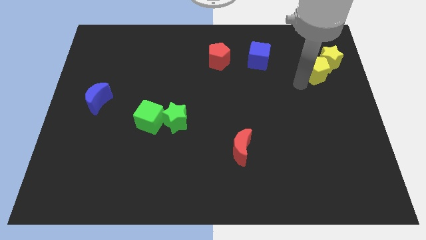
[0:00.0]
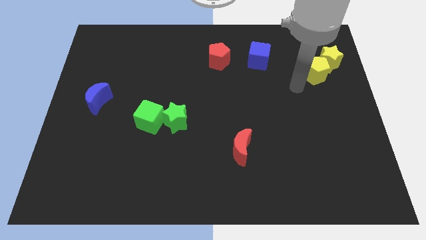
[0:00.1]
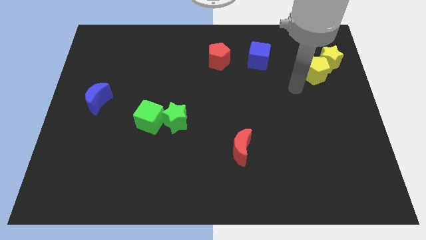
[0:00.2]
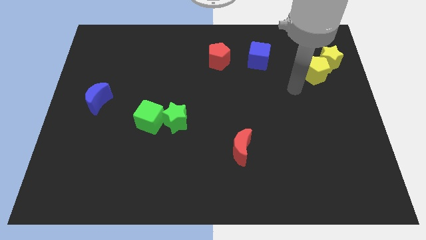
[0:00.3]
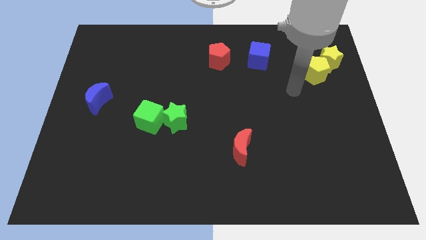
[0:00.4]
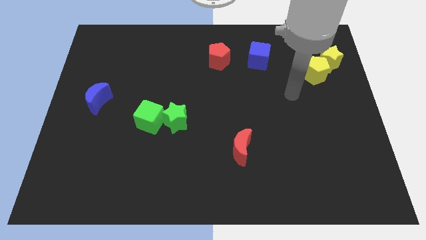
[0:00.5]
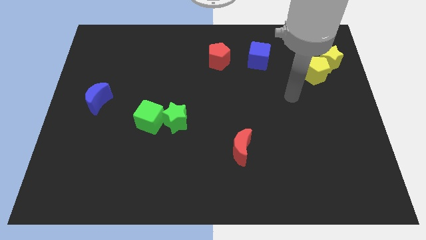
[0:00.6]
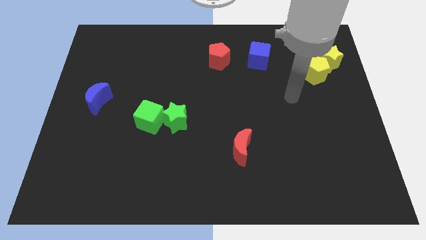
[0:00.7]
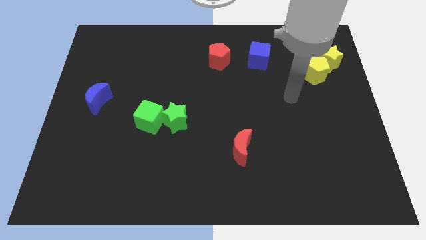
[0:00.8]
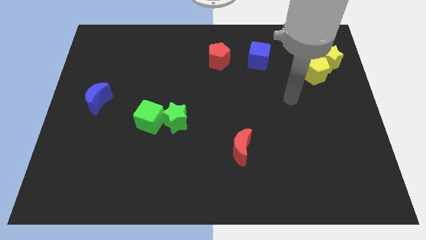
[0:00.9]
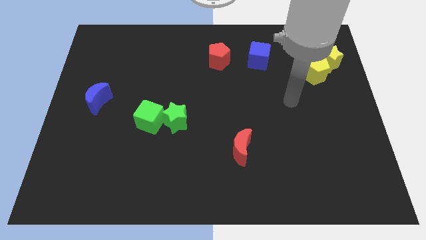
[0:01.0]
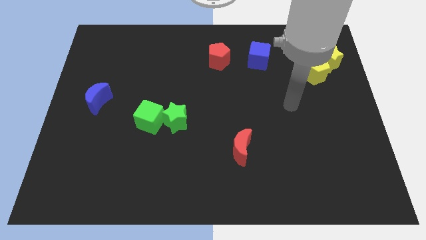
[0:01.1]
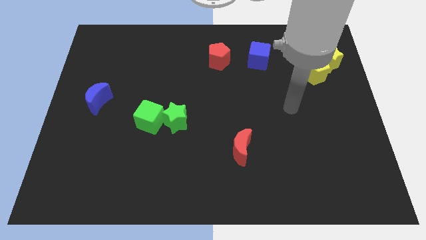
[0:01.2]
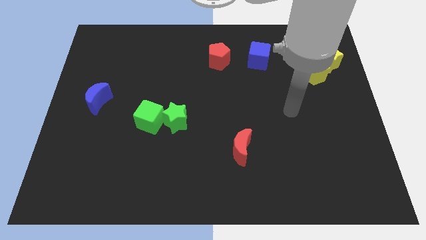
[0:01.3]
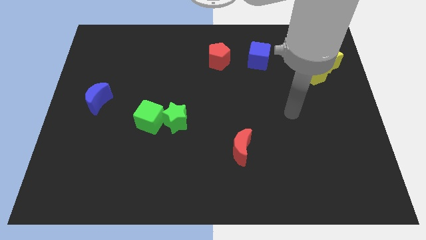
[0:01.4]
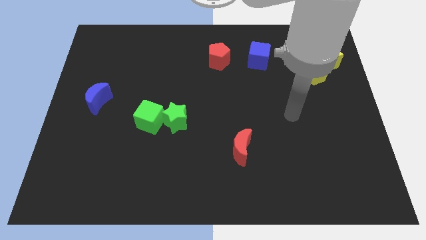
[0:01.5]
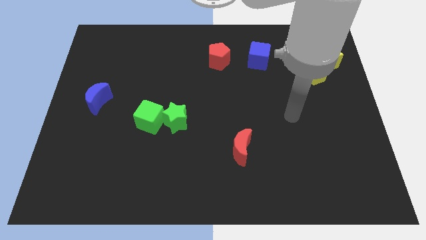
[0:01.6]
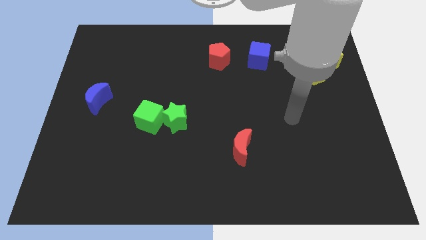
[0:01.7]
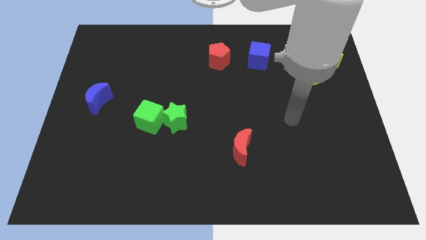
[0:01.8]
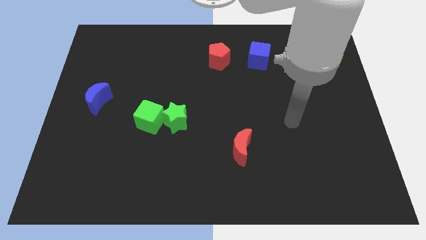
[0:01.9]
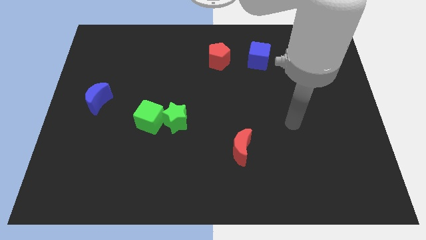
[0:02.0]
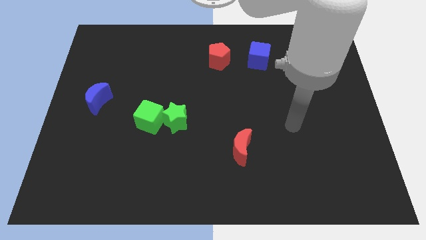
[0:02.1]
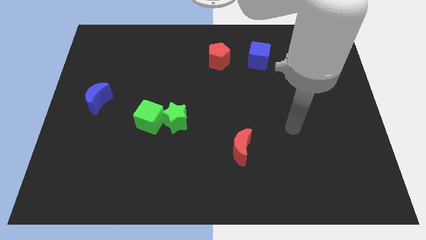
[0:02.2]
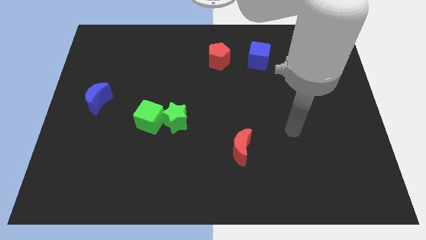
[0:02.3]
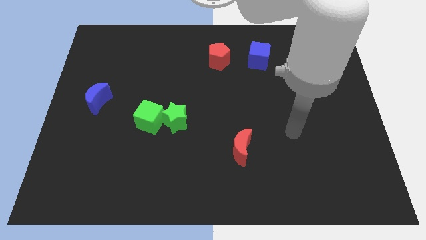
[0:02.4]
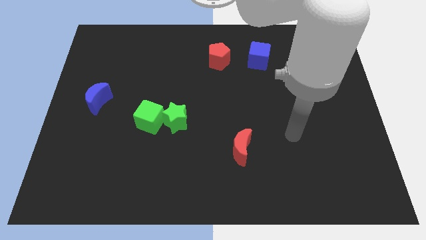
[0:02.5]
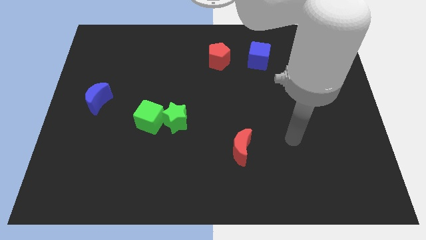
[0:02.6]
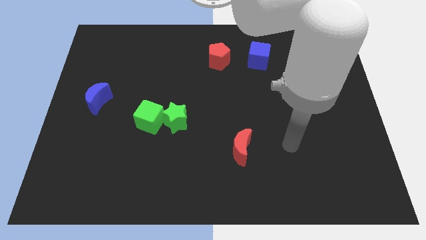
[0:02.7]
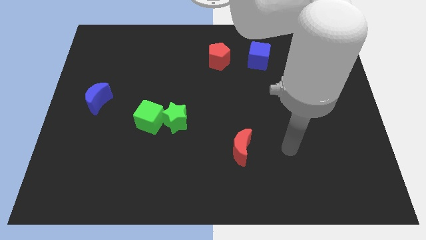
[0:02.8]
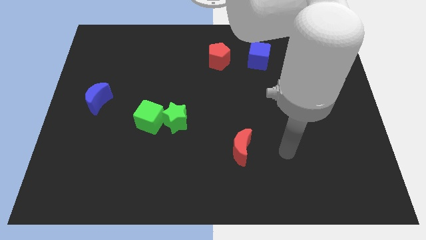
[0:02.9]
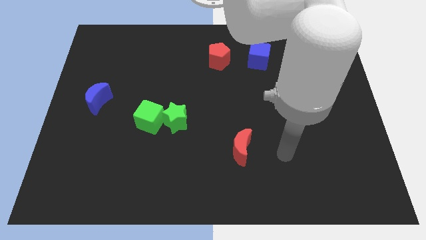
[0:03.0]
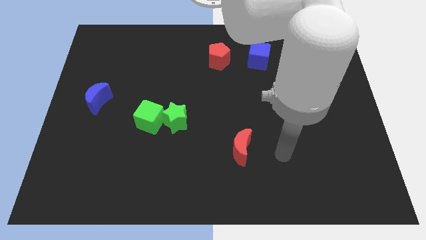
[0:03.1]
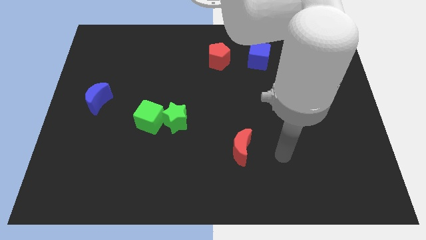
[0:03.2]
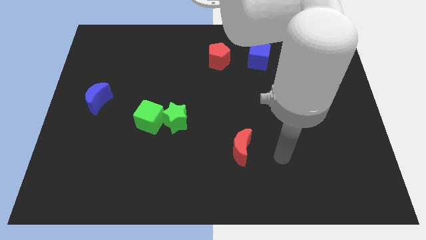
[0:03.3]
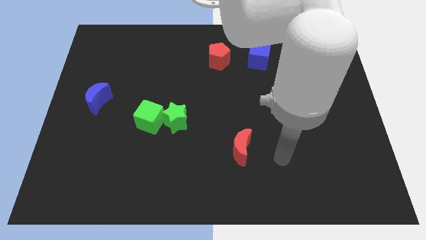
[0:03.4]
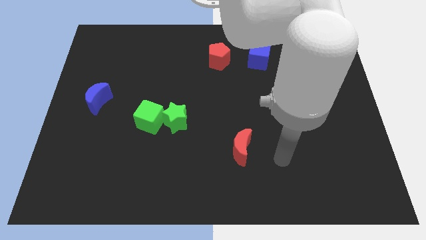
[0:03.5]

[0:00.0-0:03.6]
go and point your arm at the right side of the red crescent

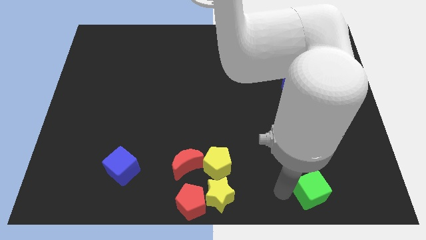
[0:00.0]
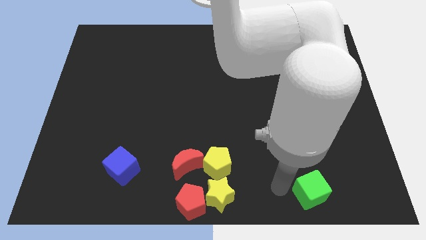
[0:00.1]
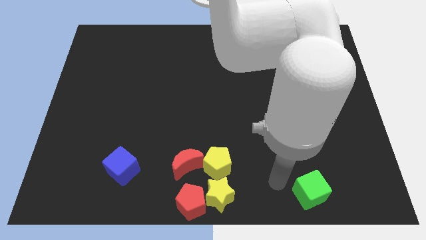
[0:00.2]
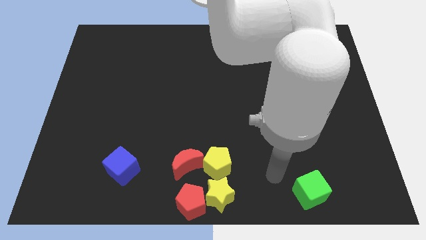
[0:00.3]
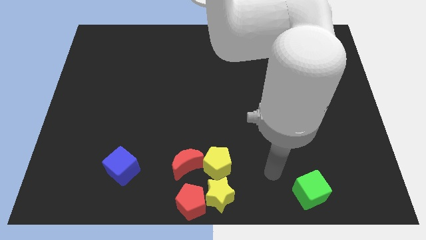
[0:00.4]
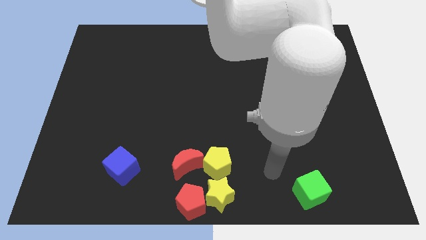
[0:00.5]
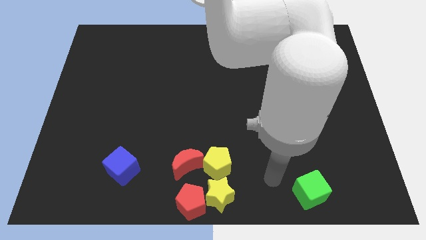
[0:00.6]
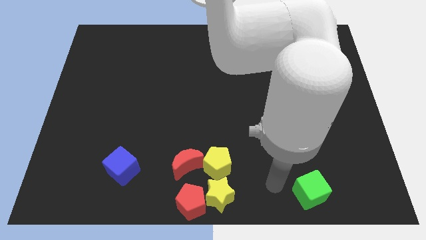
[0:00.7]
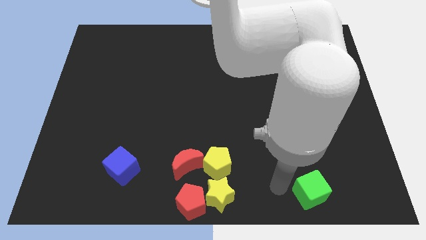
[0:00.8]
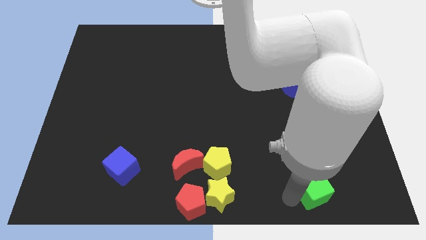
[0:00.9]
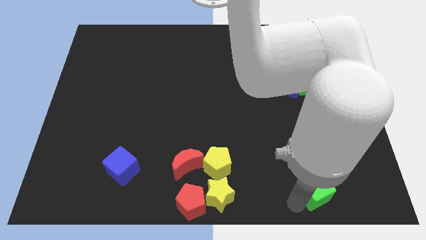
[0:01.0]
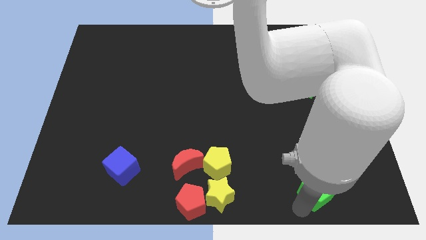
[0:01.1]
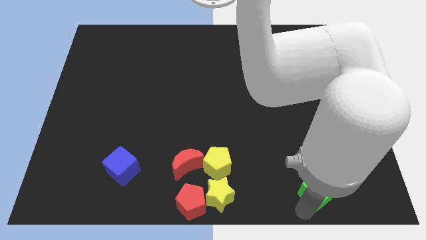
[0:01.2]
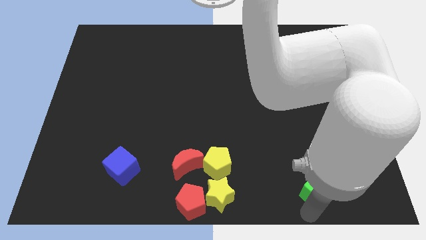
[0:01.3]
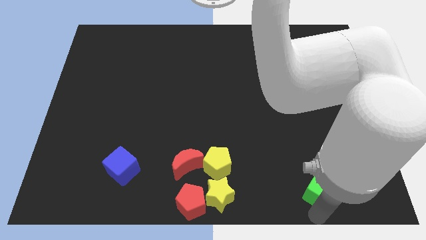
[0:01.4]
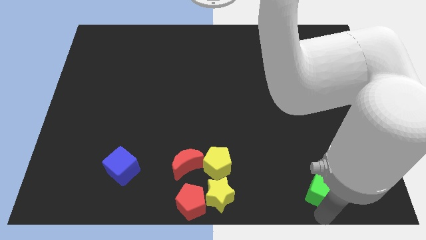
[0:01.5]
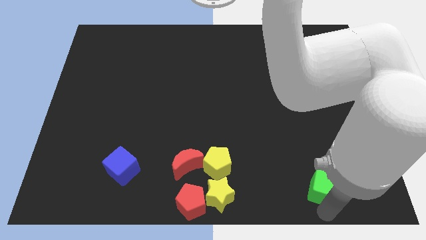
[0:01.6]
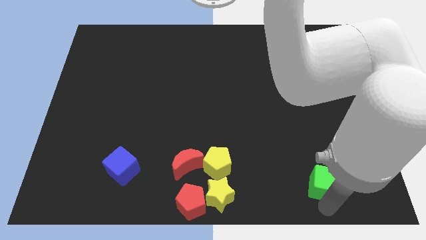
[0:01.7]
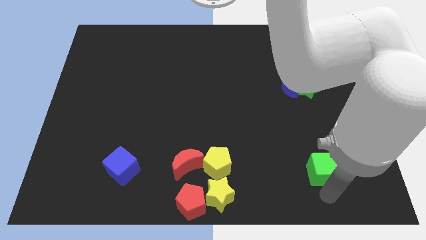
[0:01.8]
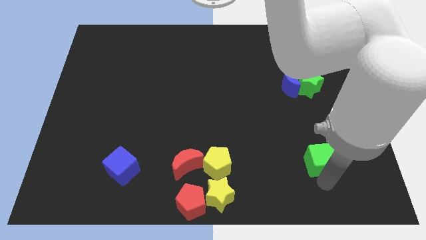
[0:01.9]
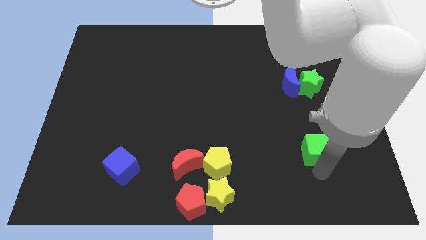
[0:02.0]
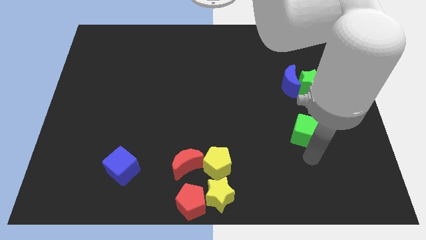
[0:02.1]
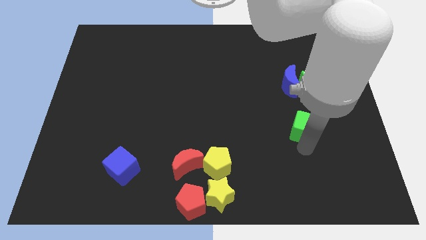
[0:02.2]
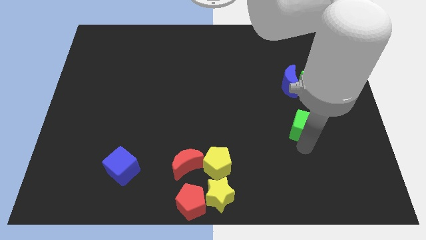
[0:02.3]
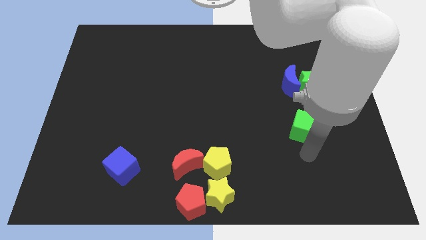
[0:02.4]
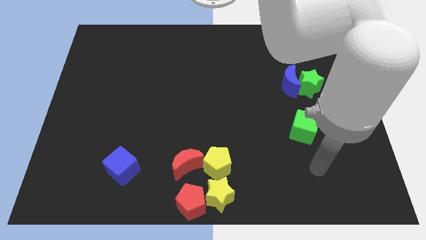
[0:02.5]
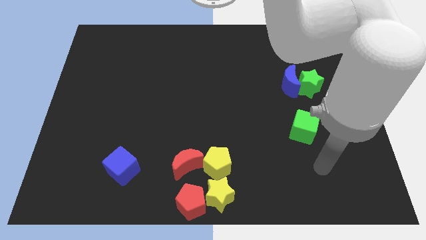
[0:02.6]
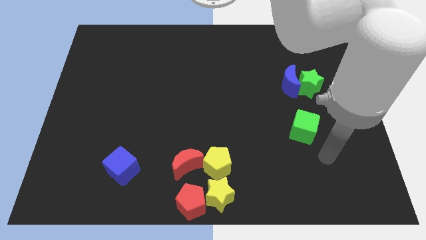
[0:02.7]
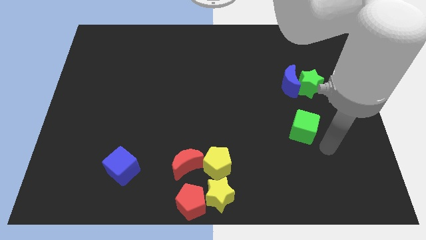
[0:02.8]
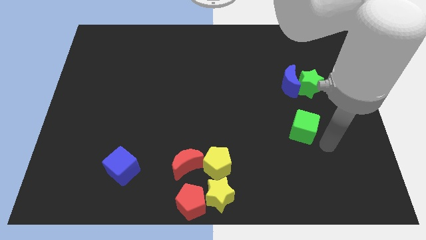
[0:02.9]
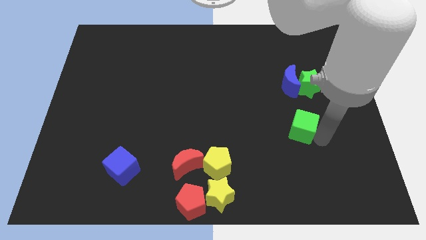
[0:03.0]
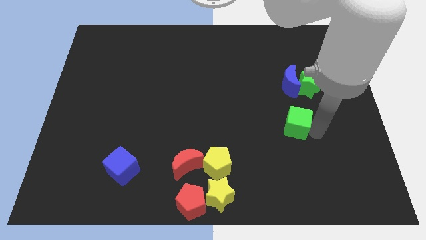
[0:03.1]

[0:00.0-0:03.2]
place green cube to the bottom of green star

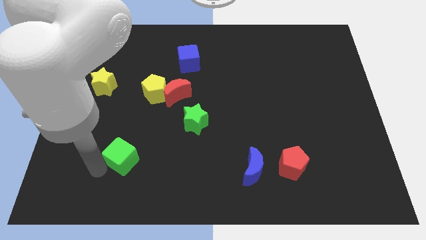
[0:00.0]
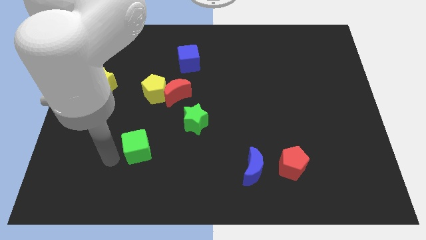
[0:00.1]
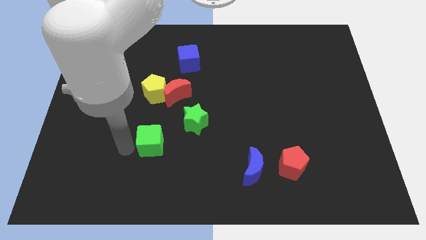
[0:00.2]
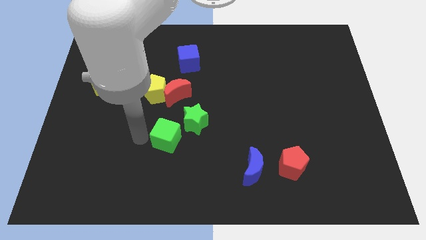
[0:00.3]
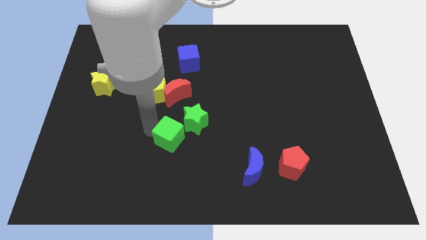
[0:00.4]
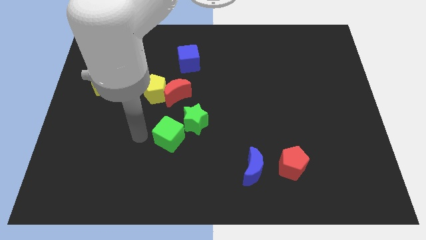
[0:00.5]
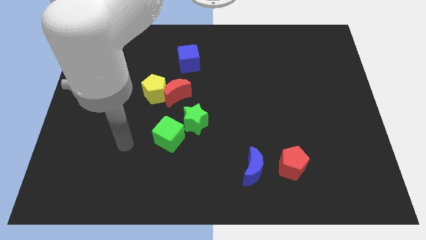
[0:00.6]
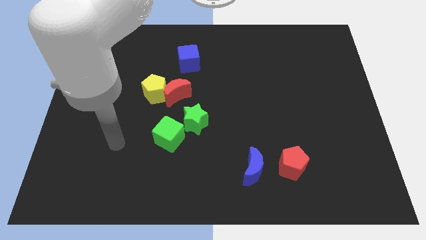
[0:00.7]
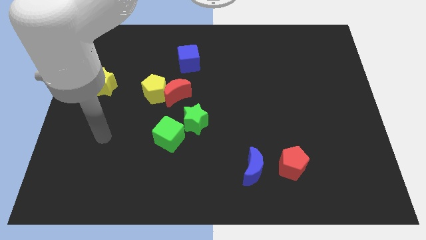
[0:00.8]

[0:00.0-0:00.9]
push the green cube and place it below the green star

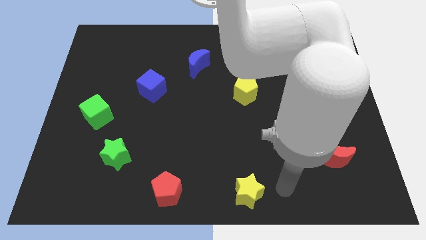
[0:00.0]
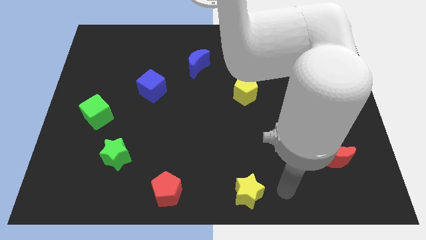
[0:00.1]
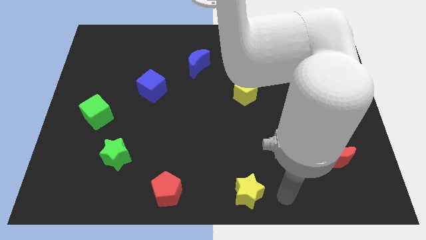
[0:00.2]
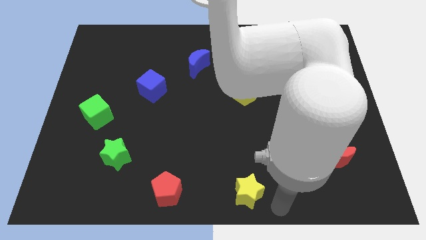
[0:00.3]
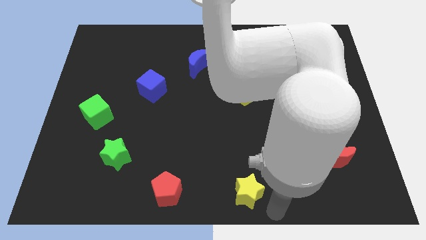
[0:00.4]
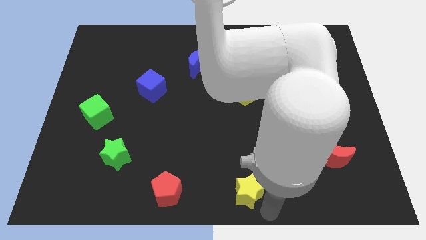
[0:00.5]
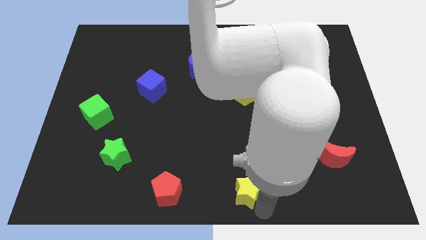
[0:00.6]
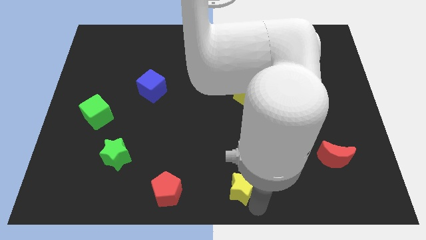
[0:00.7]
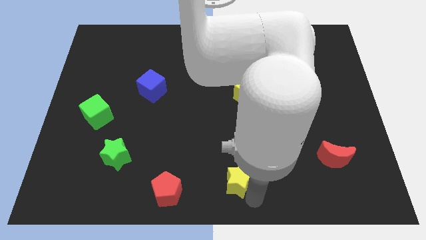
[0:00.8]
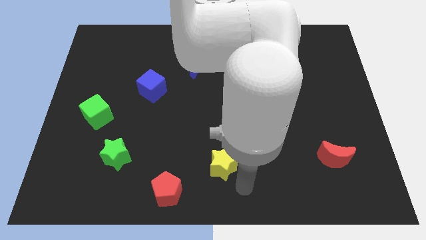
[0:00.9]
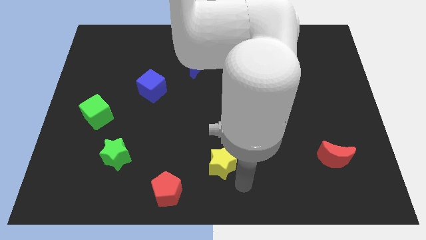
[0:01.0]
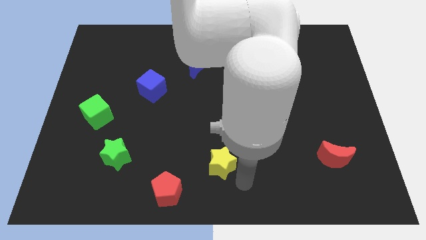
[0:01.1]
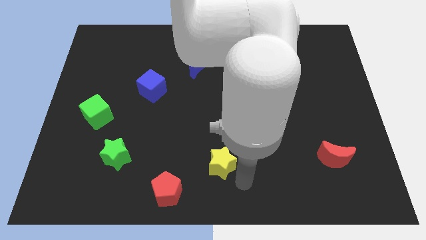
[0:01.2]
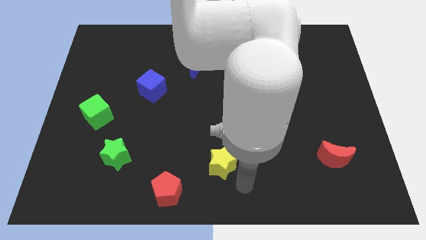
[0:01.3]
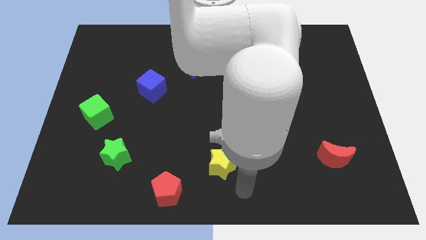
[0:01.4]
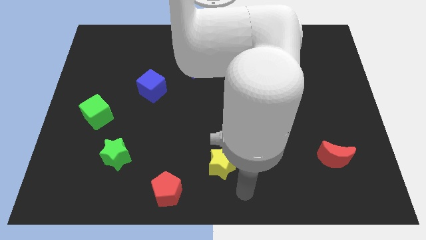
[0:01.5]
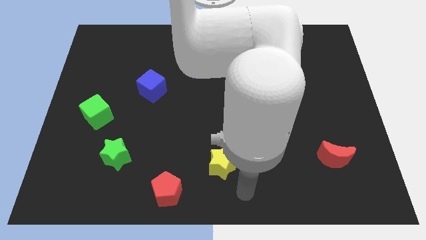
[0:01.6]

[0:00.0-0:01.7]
move the yellow star to the top of the board
